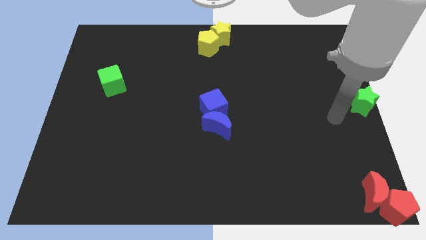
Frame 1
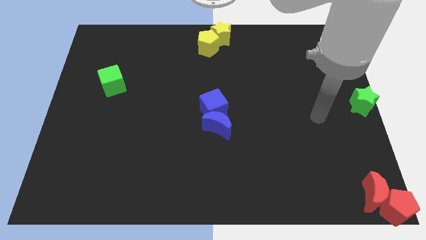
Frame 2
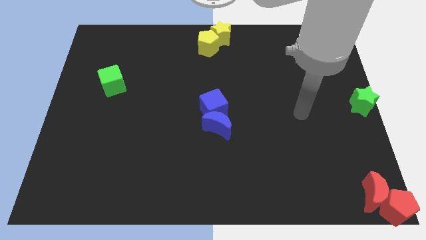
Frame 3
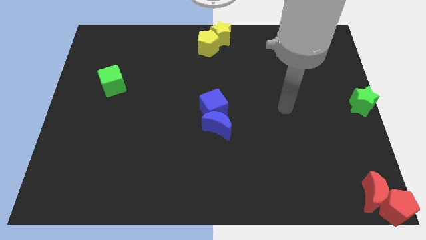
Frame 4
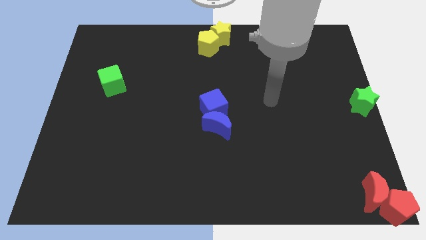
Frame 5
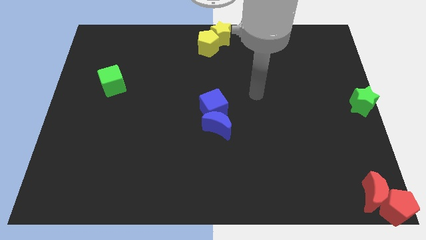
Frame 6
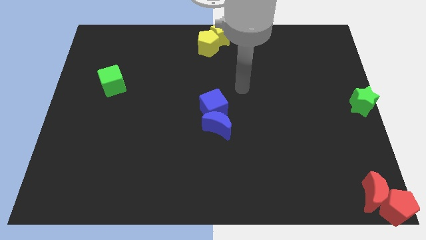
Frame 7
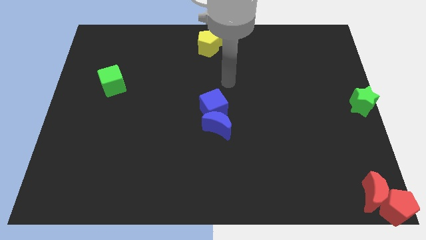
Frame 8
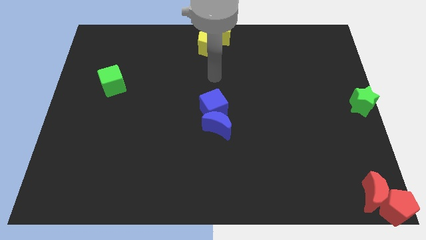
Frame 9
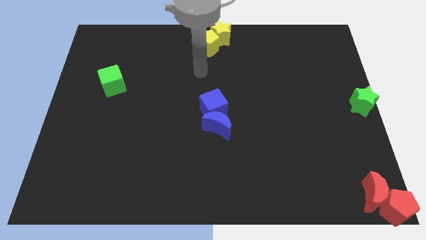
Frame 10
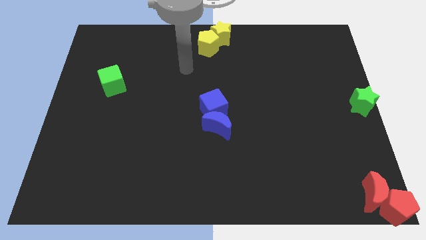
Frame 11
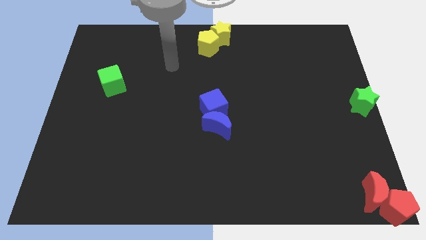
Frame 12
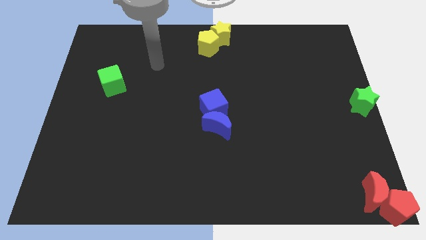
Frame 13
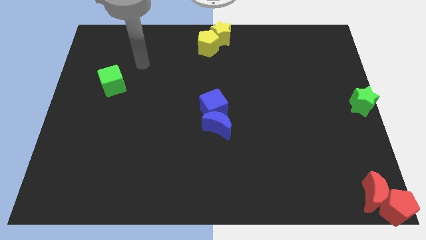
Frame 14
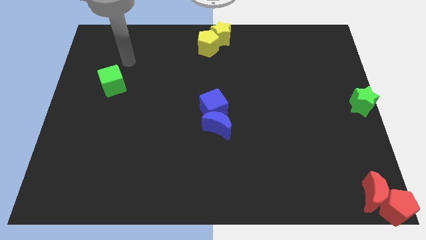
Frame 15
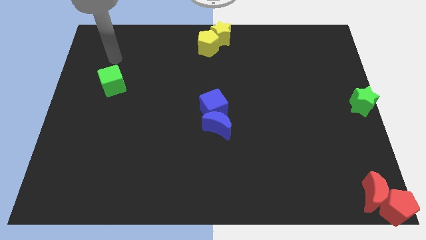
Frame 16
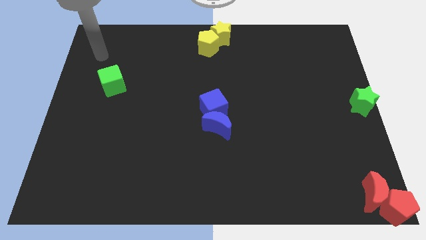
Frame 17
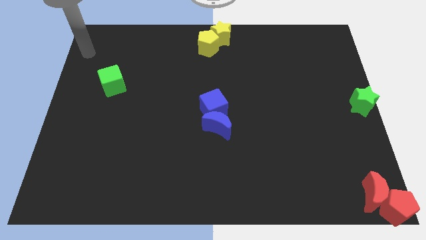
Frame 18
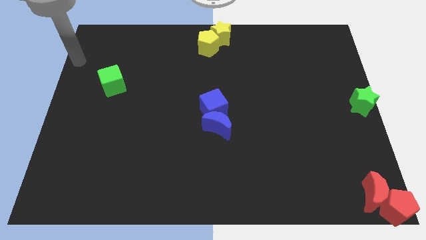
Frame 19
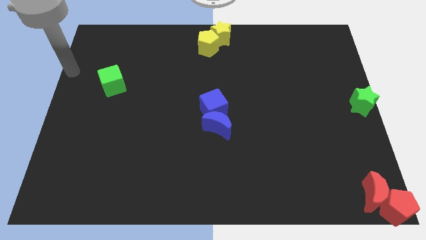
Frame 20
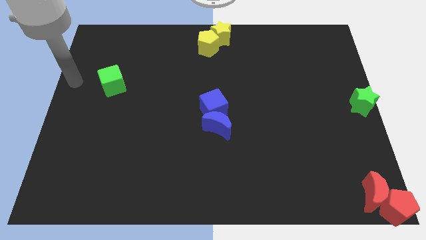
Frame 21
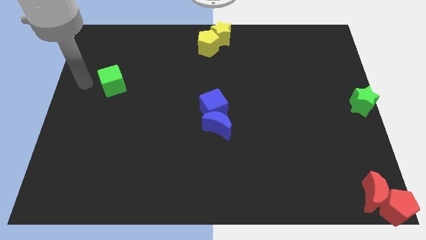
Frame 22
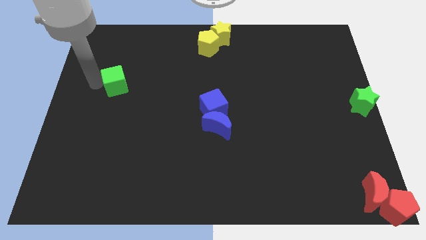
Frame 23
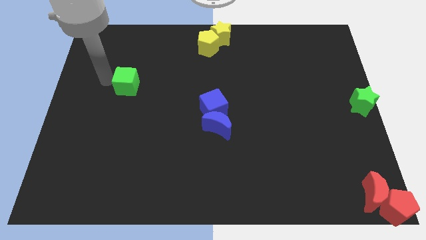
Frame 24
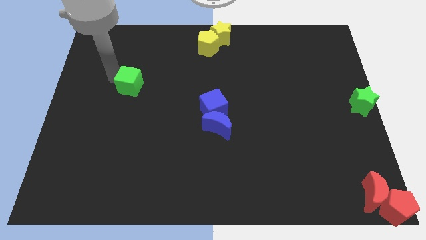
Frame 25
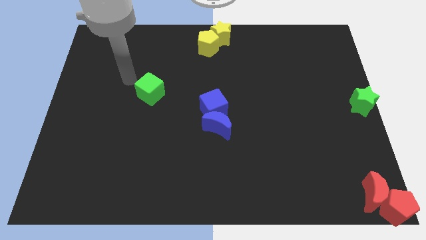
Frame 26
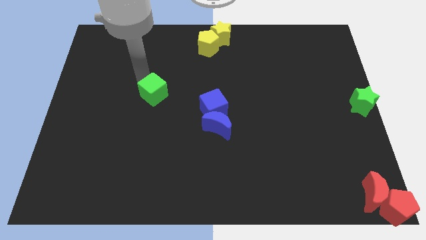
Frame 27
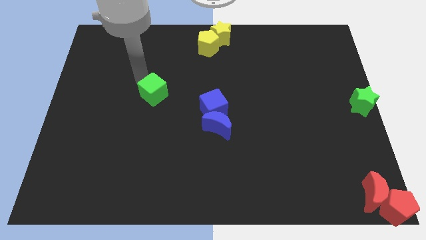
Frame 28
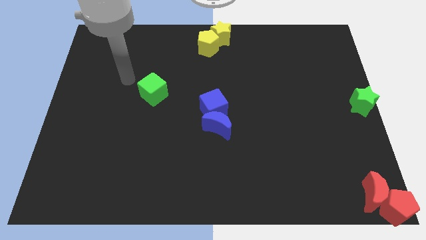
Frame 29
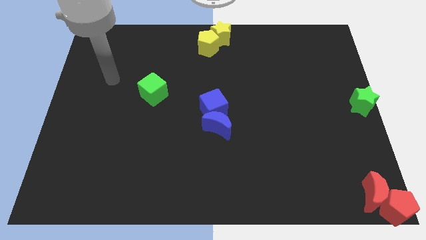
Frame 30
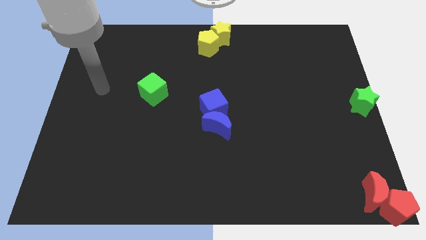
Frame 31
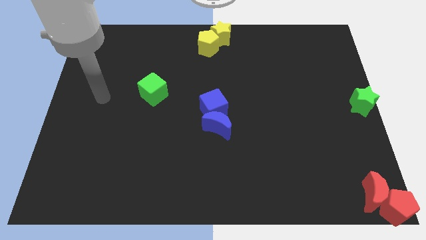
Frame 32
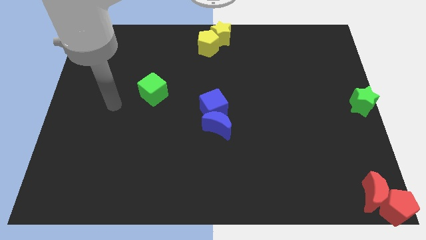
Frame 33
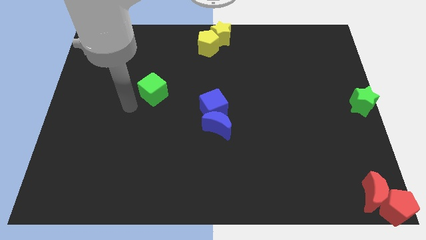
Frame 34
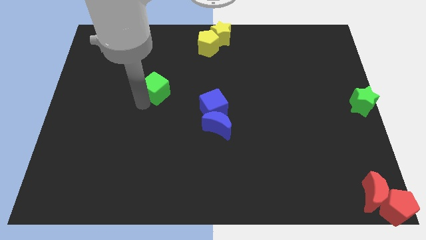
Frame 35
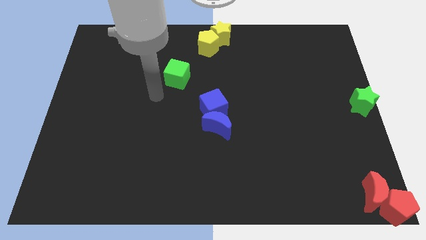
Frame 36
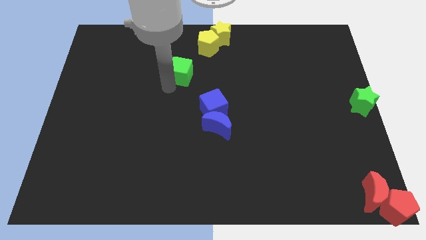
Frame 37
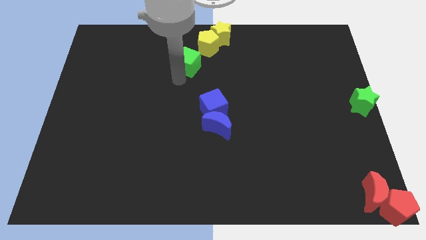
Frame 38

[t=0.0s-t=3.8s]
move the green cube to the bottom left of the yellow pentagon

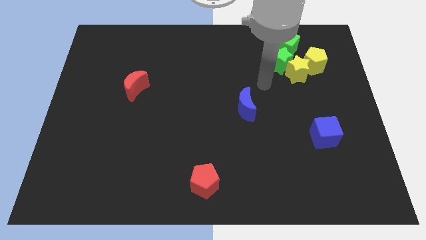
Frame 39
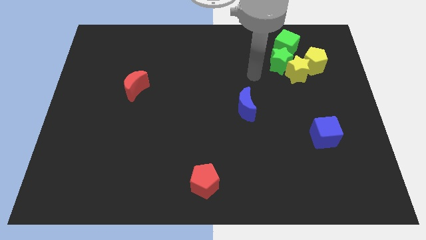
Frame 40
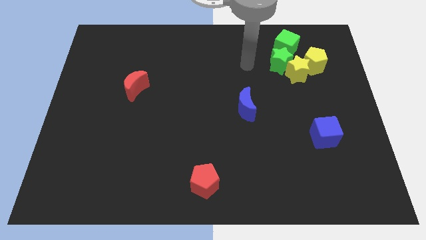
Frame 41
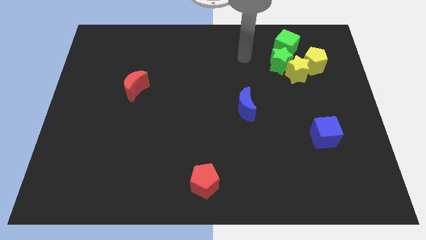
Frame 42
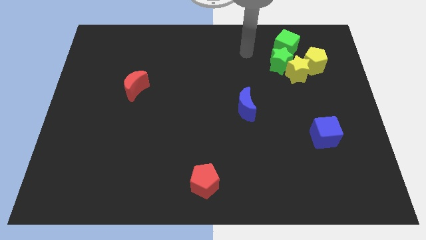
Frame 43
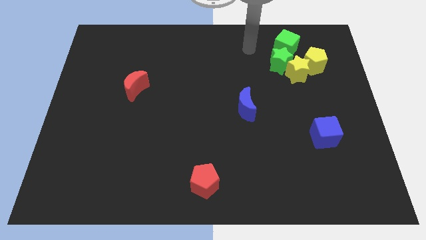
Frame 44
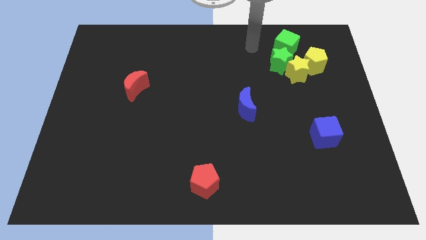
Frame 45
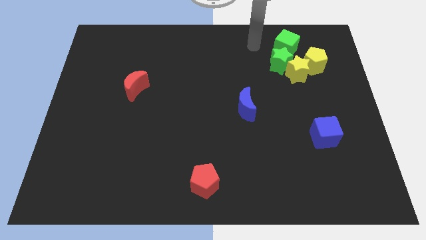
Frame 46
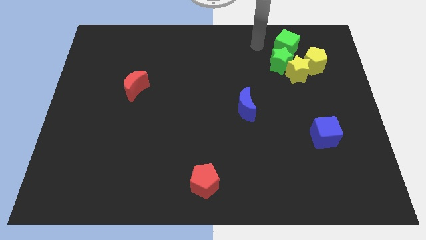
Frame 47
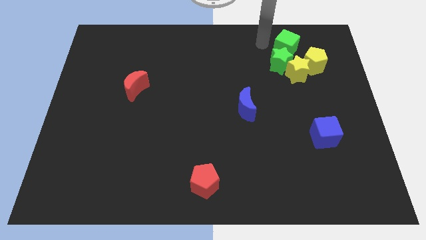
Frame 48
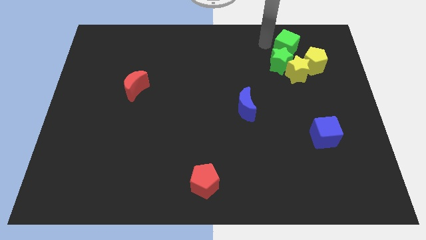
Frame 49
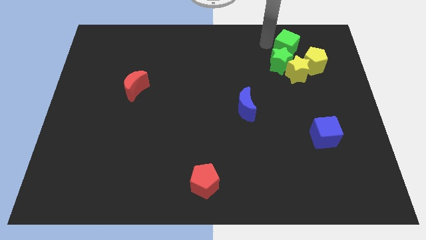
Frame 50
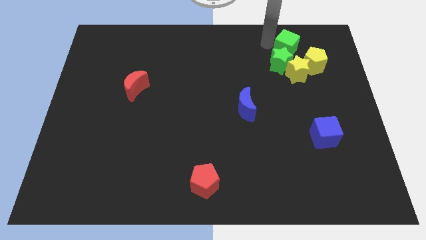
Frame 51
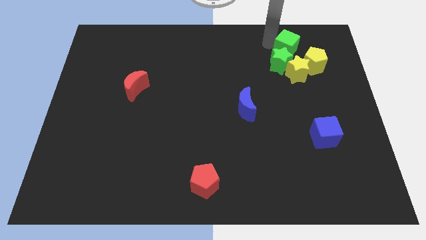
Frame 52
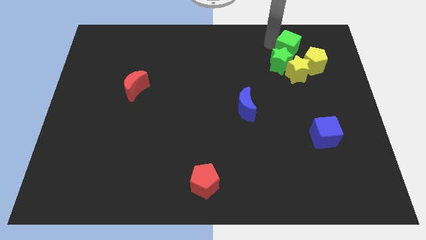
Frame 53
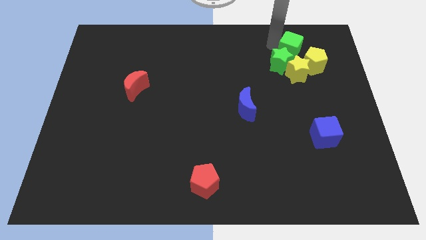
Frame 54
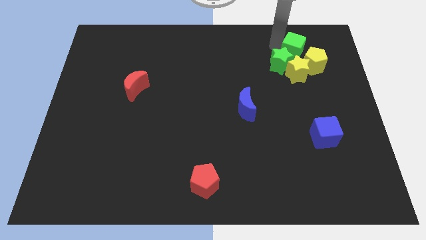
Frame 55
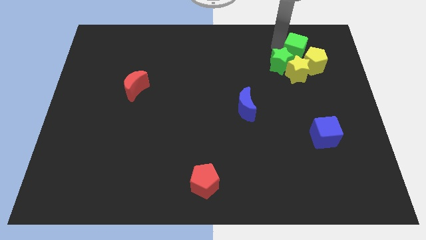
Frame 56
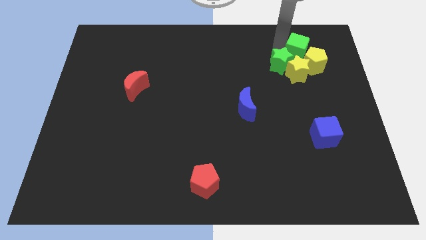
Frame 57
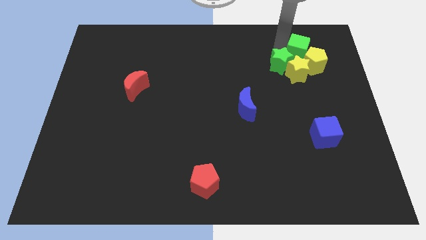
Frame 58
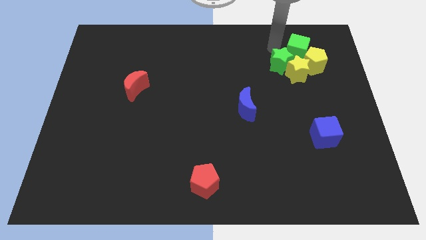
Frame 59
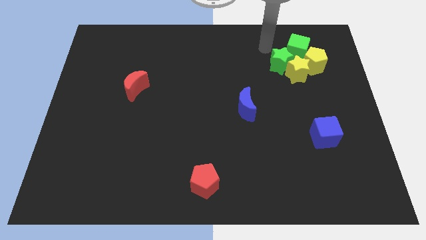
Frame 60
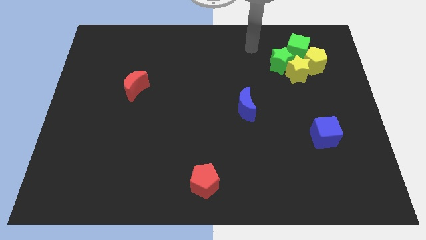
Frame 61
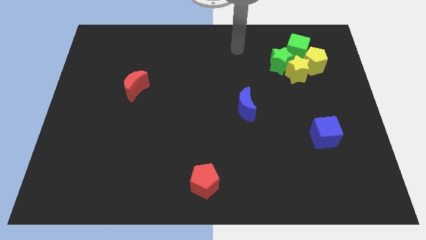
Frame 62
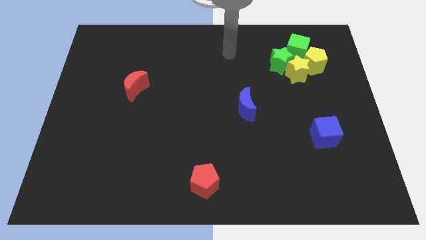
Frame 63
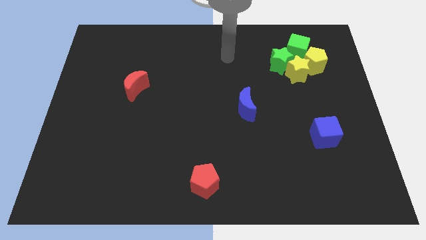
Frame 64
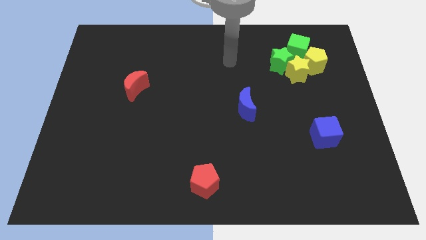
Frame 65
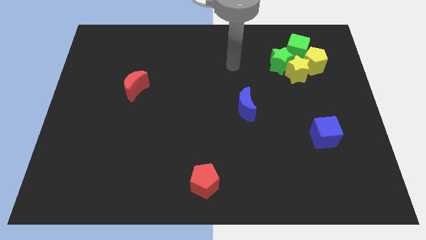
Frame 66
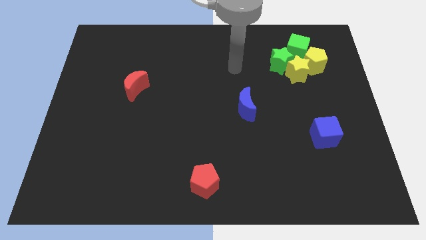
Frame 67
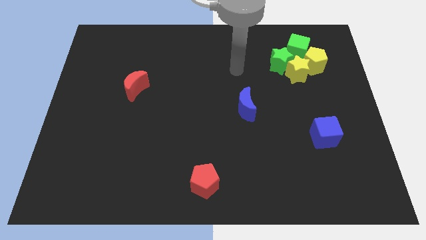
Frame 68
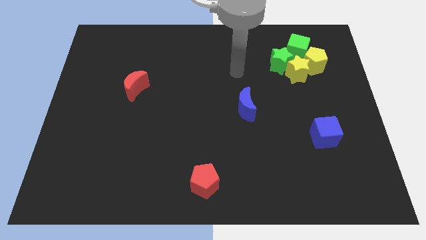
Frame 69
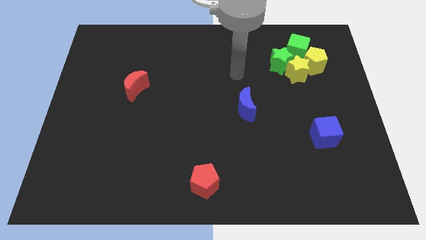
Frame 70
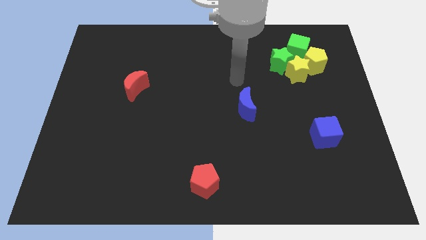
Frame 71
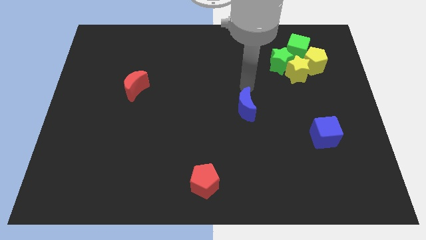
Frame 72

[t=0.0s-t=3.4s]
push the green cube to the group of blocks

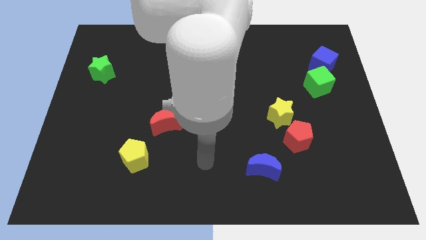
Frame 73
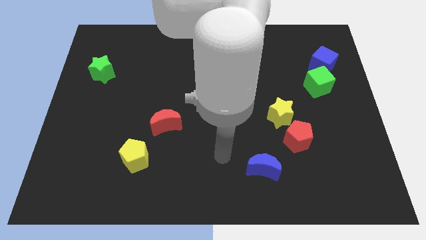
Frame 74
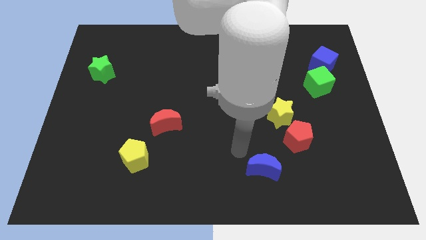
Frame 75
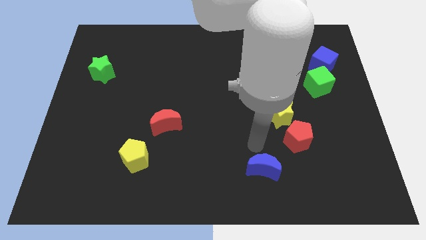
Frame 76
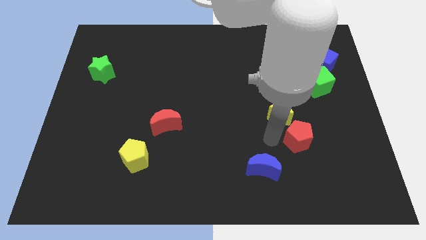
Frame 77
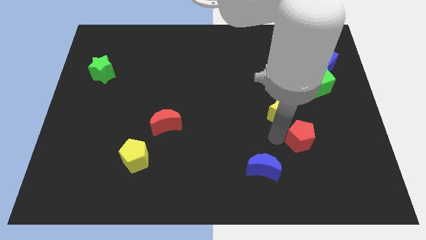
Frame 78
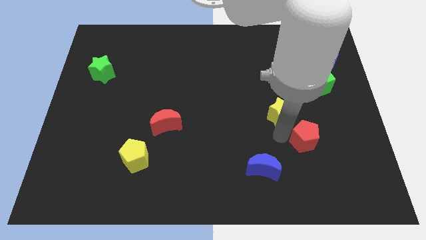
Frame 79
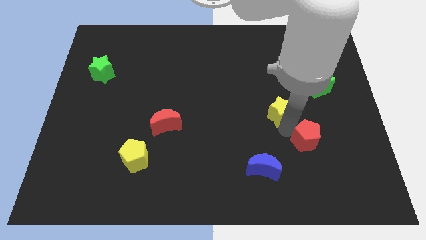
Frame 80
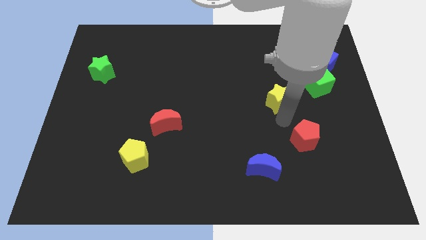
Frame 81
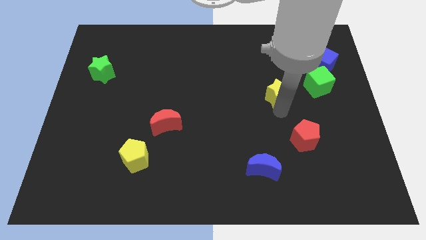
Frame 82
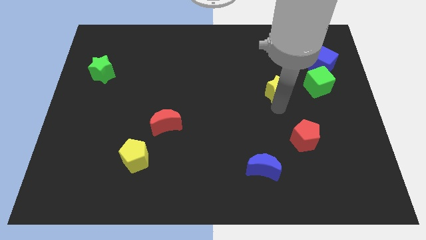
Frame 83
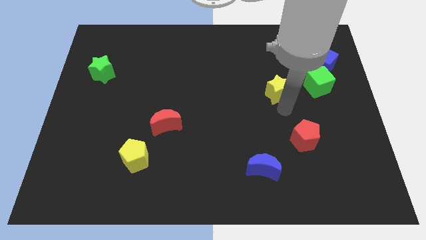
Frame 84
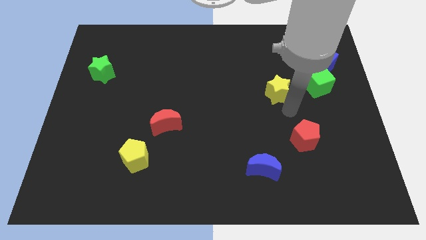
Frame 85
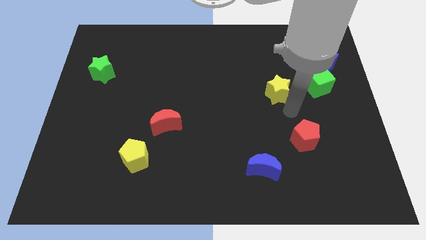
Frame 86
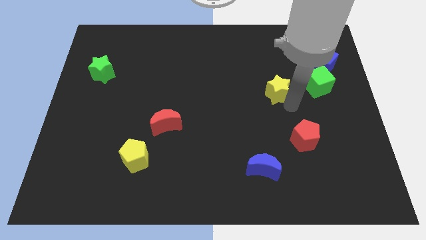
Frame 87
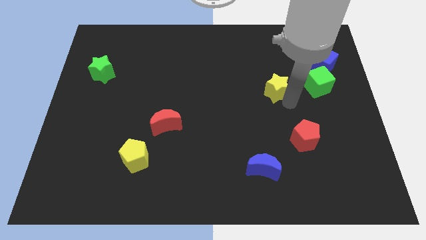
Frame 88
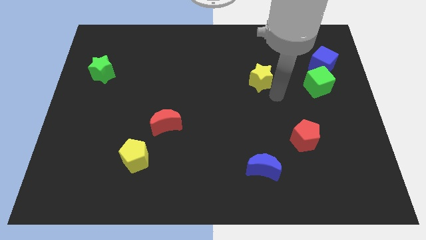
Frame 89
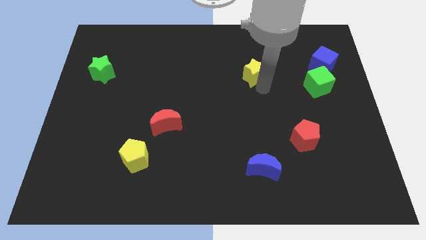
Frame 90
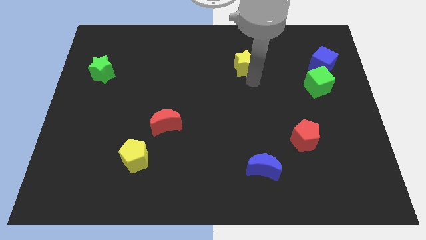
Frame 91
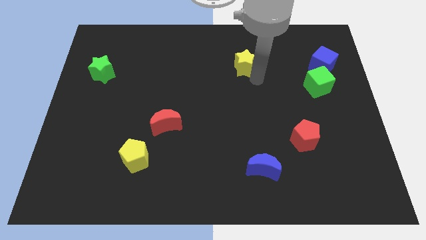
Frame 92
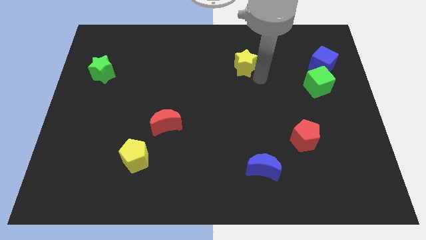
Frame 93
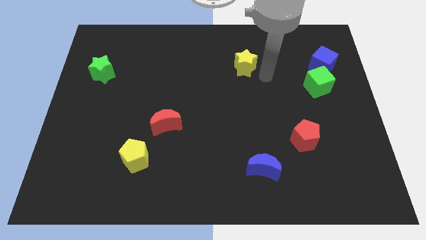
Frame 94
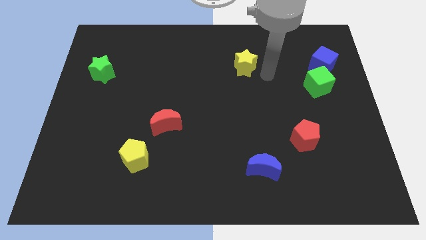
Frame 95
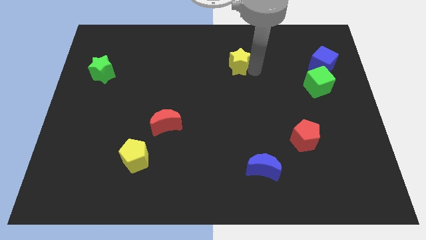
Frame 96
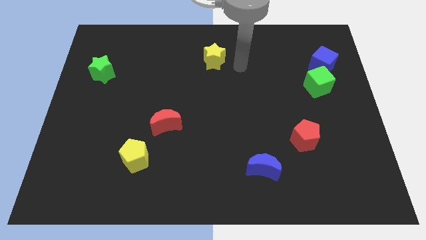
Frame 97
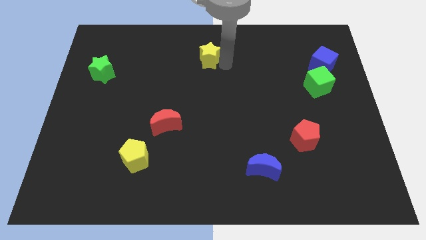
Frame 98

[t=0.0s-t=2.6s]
separate the yellow star from red pentagon
